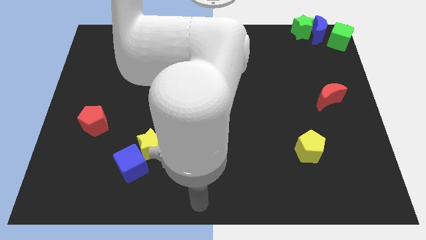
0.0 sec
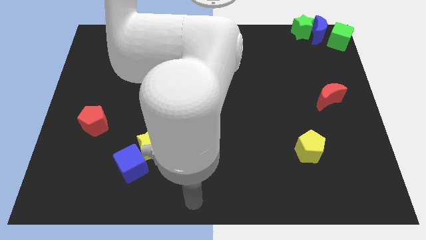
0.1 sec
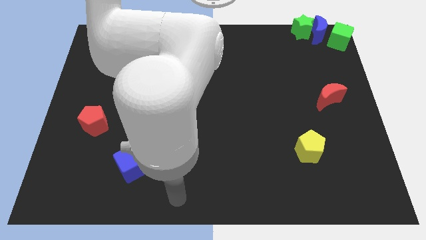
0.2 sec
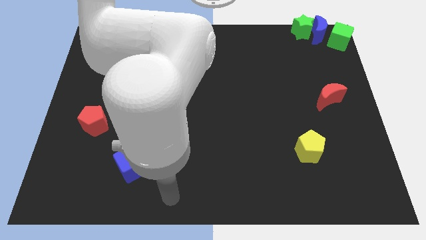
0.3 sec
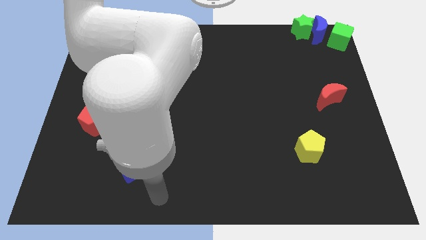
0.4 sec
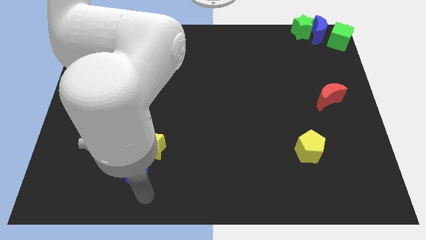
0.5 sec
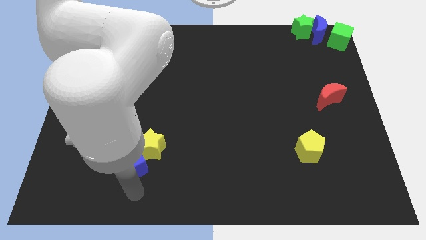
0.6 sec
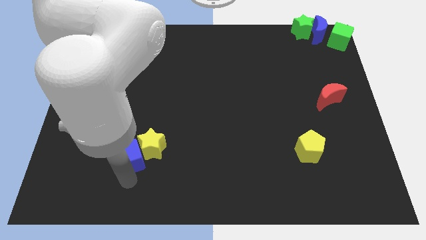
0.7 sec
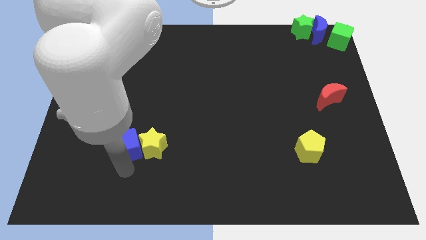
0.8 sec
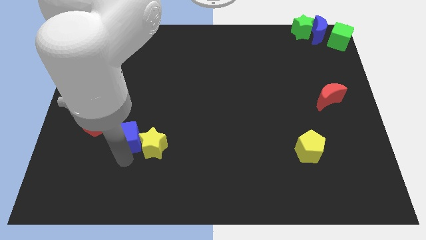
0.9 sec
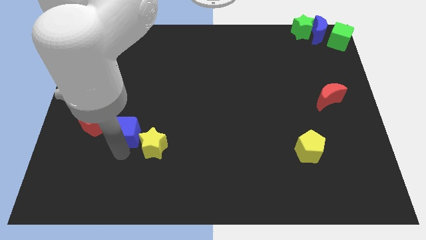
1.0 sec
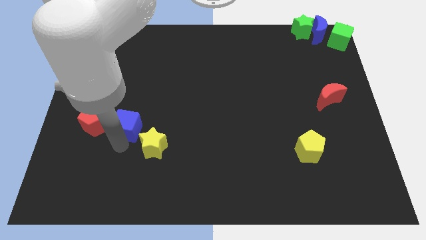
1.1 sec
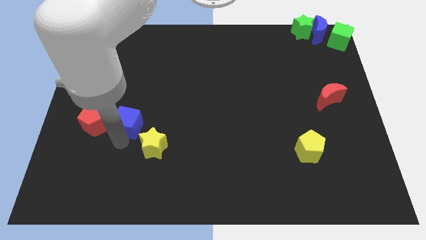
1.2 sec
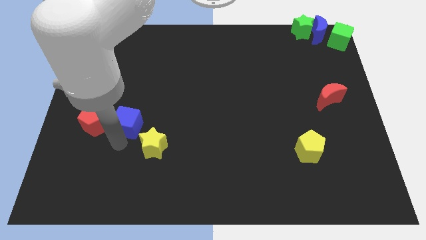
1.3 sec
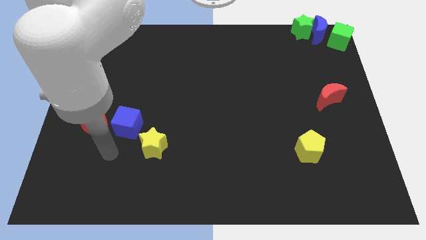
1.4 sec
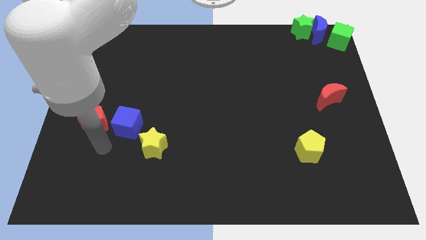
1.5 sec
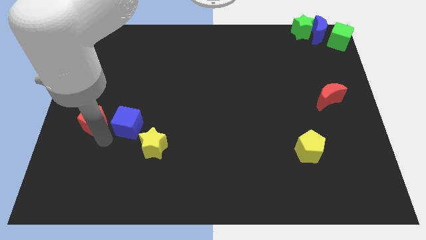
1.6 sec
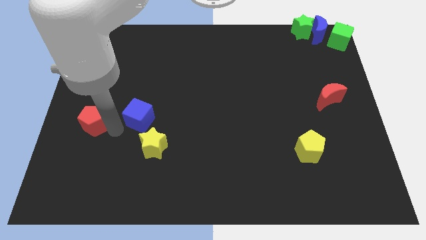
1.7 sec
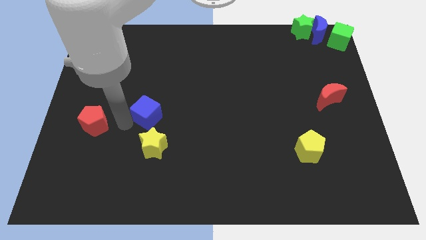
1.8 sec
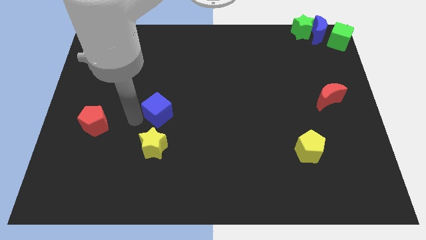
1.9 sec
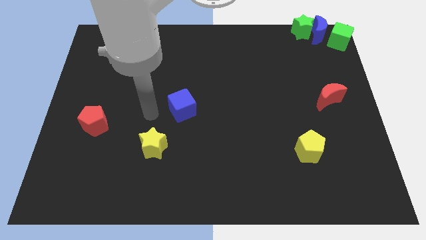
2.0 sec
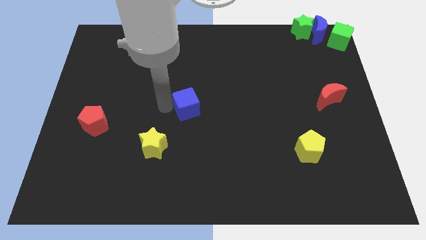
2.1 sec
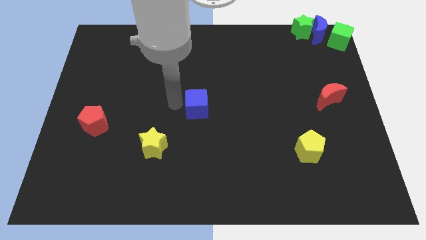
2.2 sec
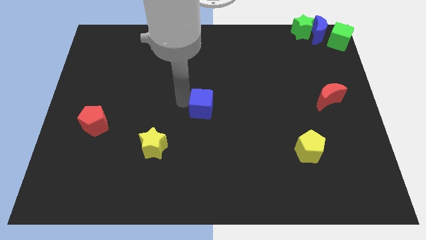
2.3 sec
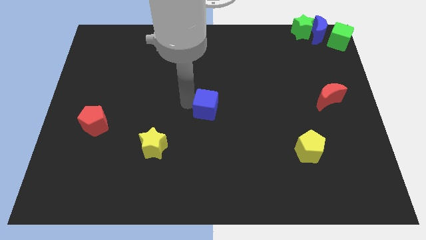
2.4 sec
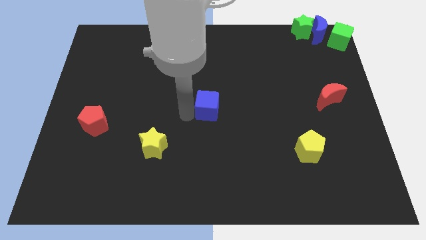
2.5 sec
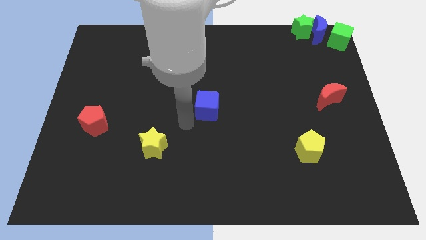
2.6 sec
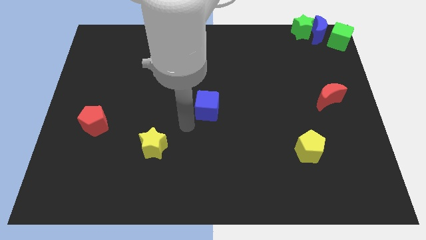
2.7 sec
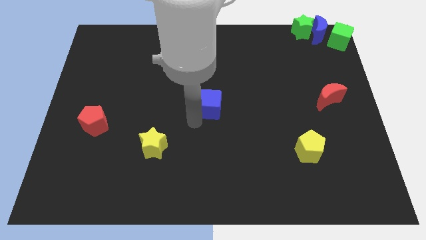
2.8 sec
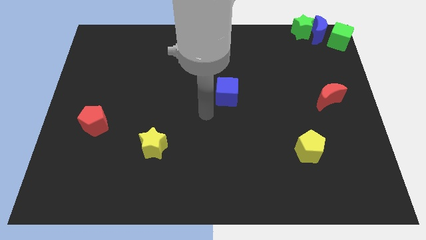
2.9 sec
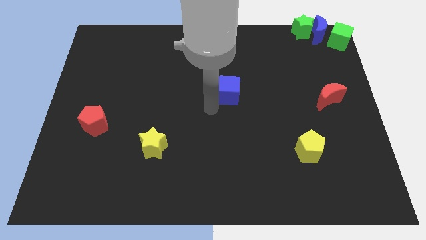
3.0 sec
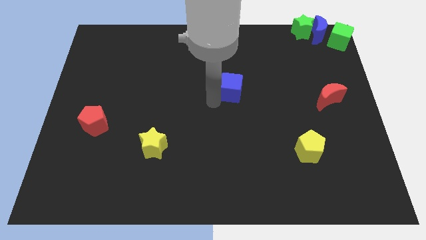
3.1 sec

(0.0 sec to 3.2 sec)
push the blue cube to the centre of the board

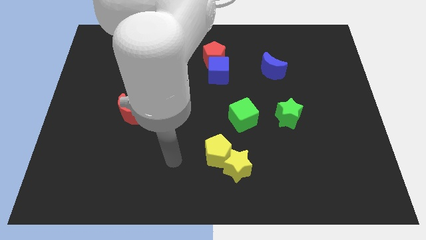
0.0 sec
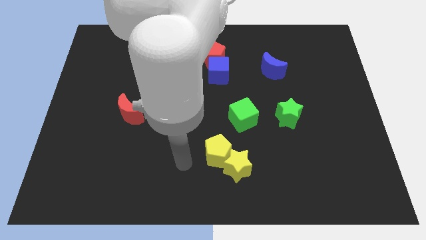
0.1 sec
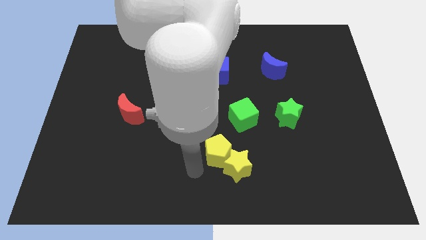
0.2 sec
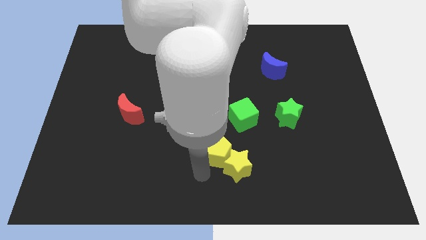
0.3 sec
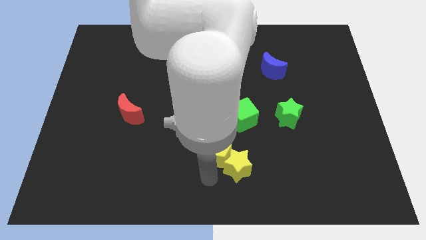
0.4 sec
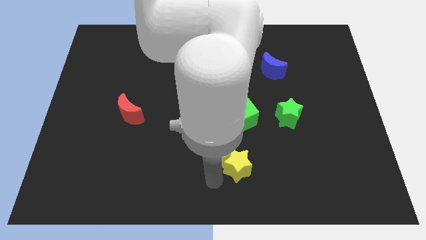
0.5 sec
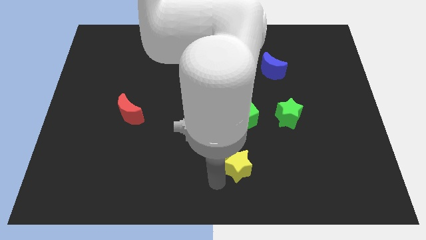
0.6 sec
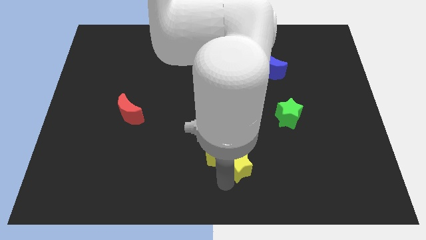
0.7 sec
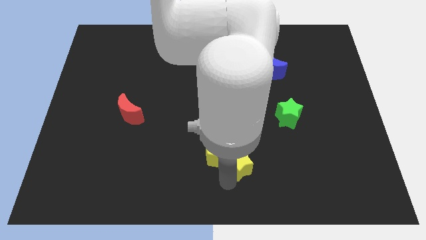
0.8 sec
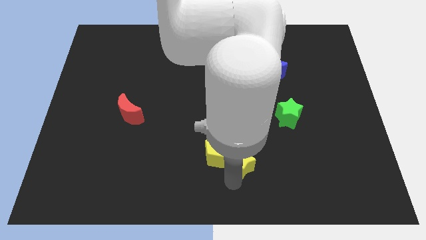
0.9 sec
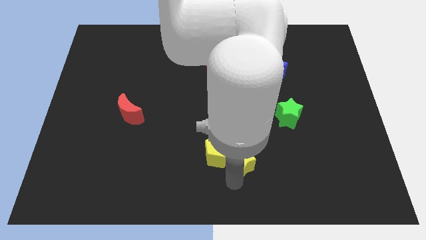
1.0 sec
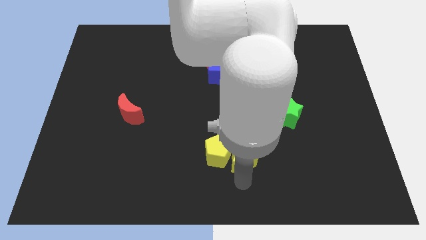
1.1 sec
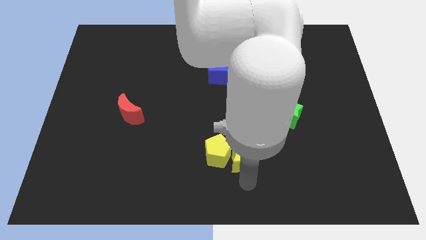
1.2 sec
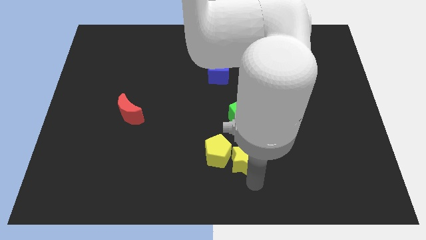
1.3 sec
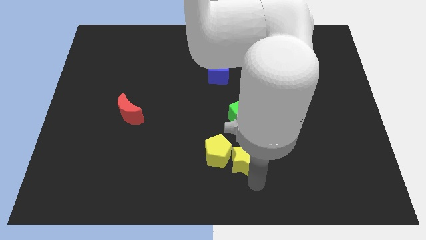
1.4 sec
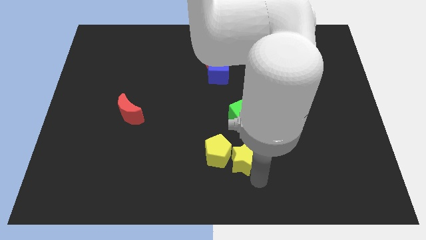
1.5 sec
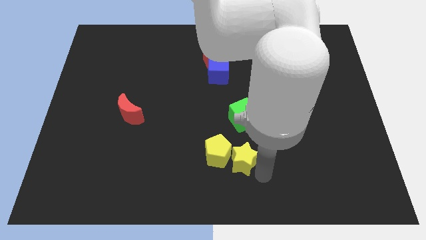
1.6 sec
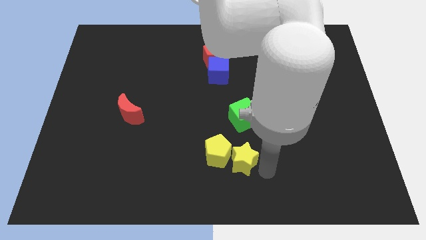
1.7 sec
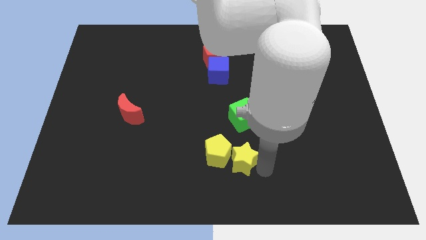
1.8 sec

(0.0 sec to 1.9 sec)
push the yellow star slightly to the top side of the board

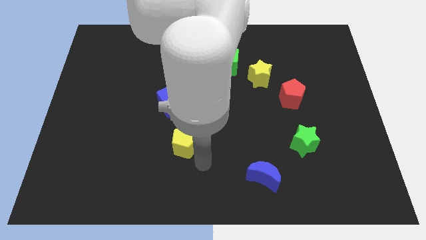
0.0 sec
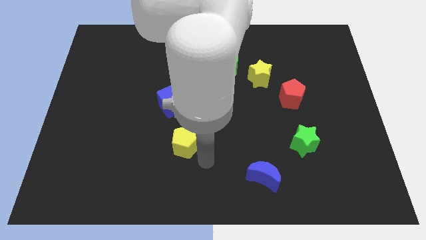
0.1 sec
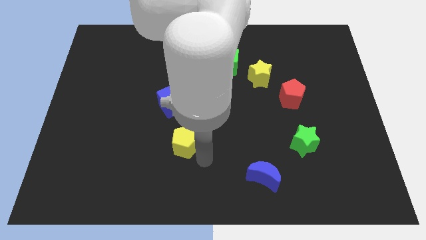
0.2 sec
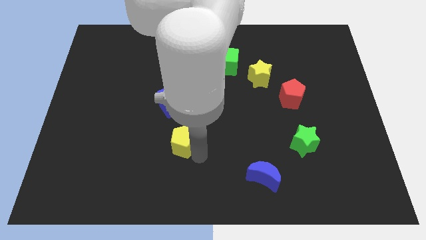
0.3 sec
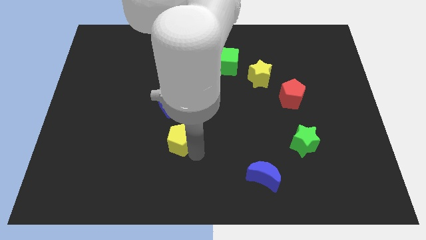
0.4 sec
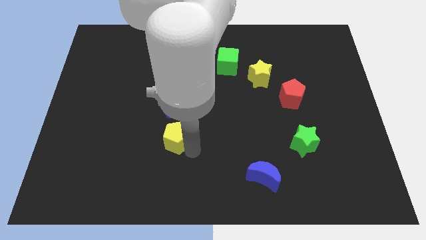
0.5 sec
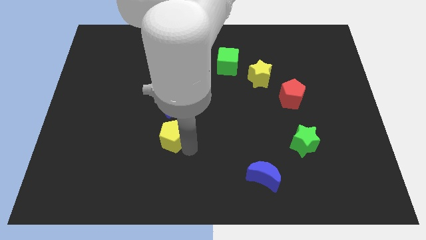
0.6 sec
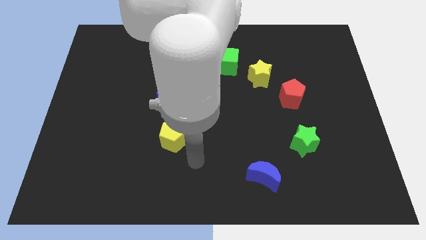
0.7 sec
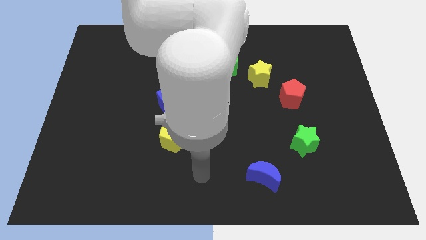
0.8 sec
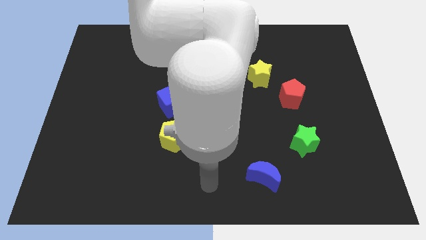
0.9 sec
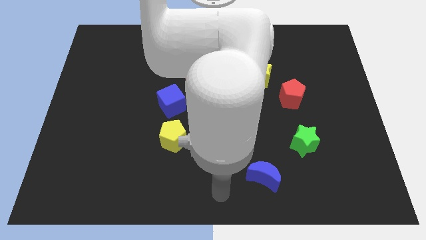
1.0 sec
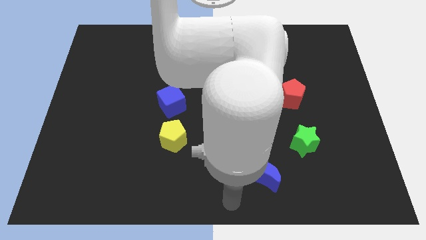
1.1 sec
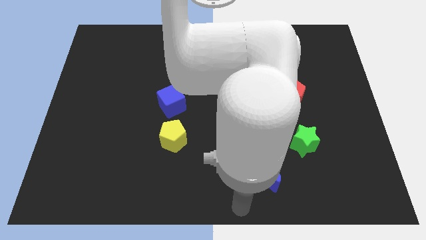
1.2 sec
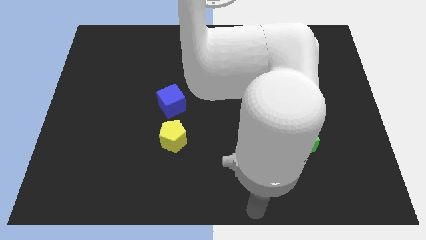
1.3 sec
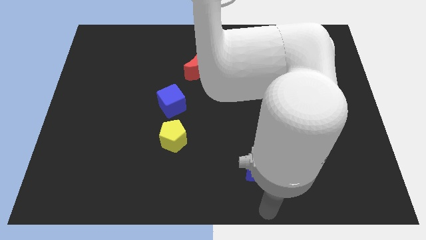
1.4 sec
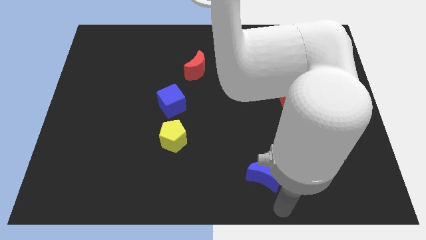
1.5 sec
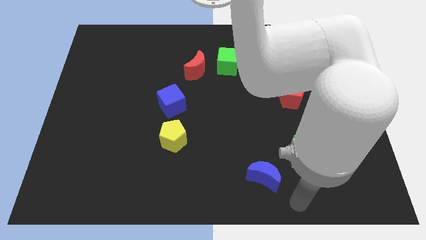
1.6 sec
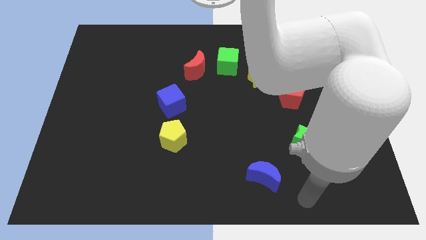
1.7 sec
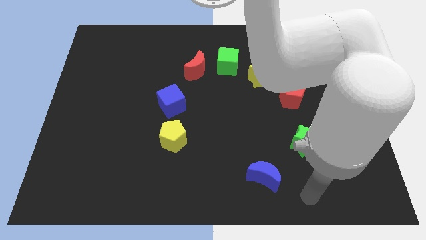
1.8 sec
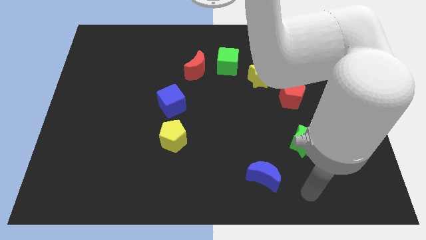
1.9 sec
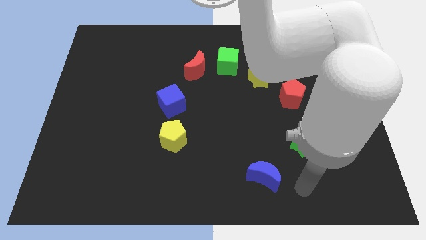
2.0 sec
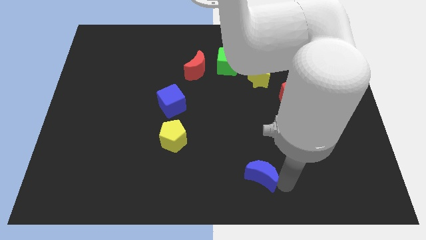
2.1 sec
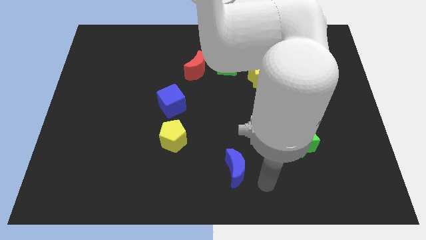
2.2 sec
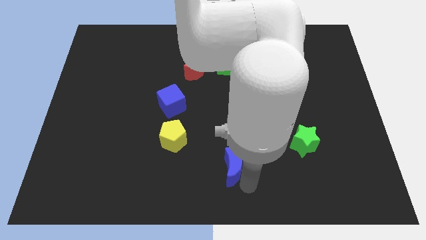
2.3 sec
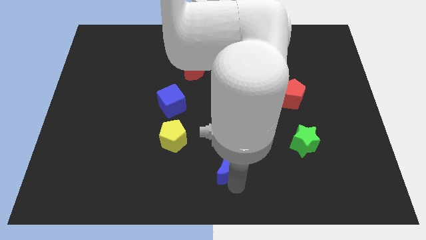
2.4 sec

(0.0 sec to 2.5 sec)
push blue crescent below green cube

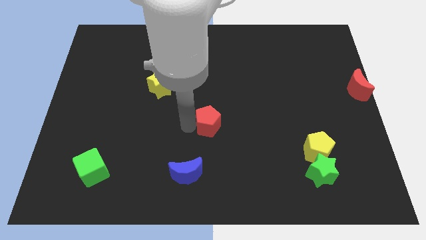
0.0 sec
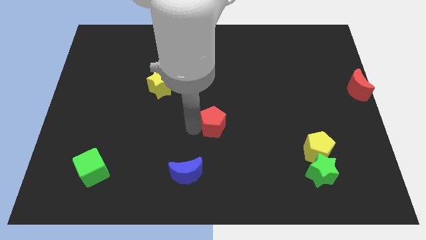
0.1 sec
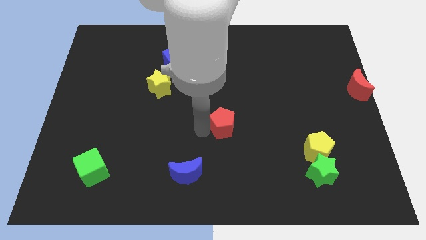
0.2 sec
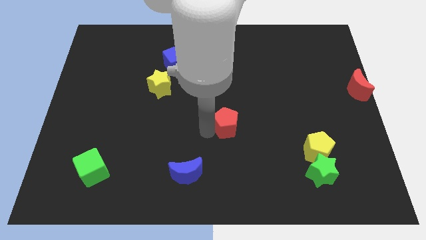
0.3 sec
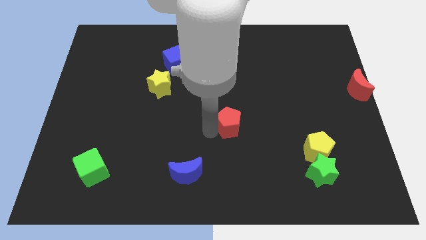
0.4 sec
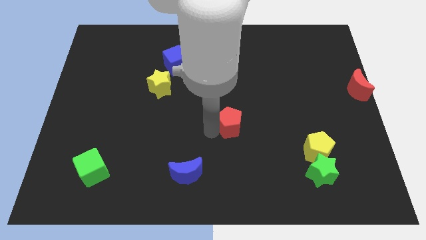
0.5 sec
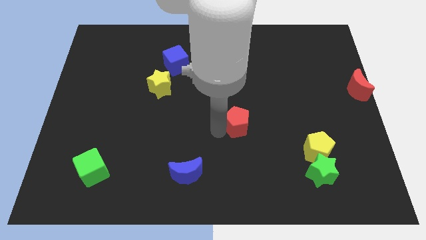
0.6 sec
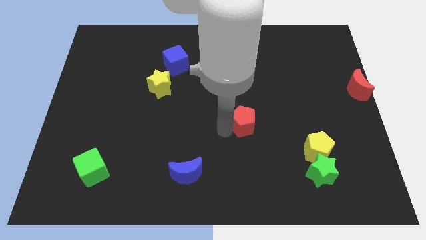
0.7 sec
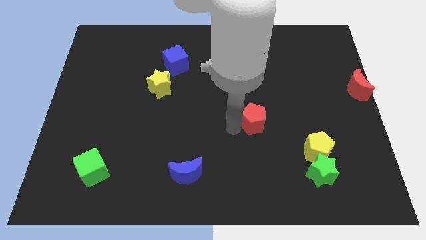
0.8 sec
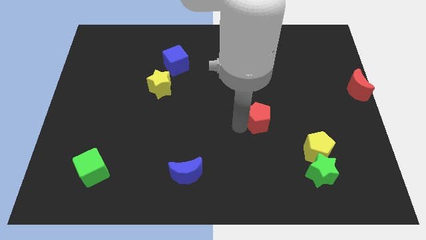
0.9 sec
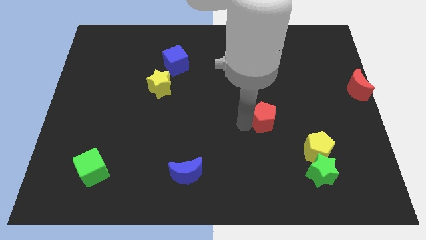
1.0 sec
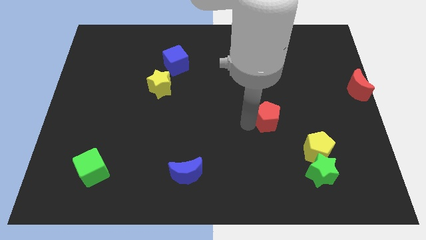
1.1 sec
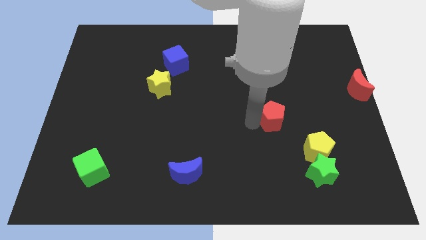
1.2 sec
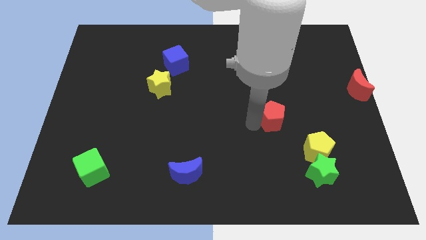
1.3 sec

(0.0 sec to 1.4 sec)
move the red pentagon towards the center right
